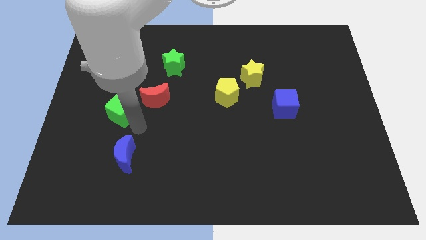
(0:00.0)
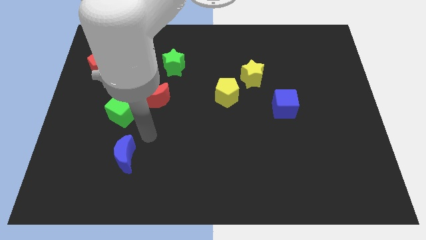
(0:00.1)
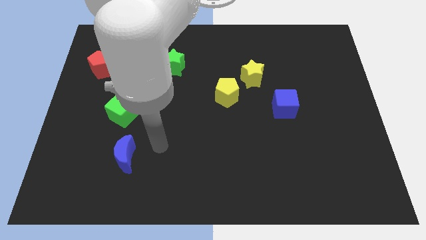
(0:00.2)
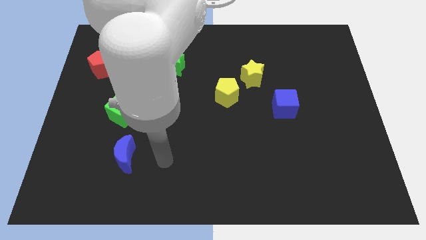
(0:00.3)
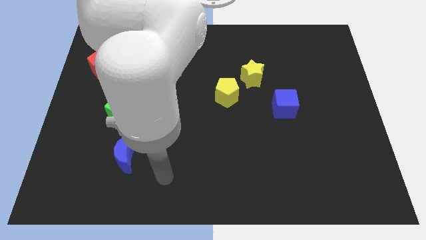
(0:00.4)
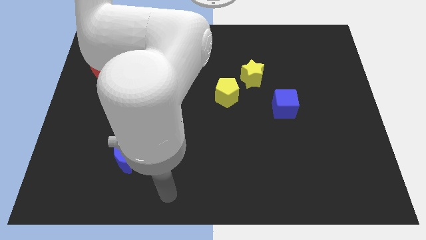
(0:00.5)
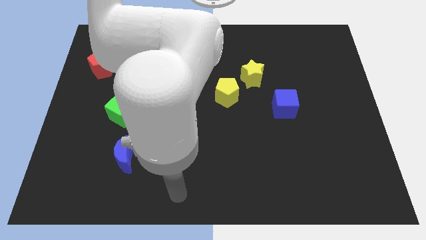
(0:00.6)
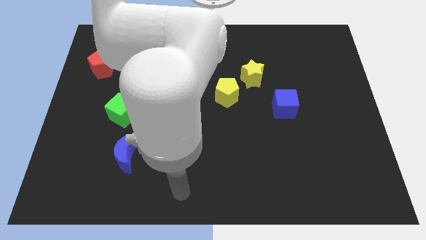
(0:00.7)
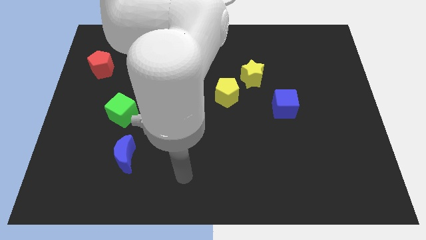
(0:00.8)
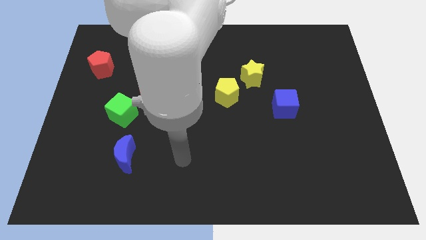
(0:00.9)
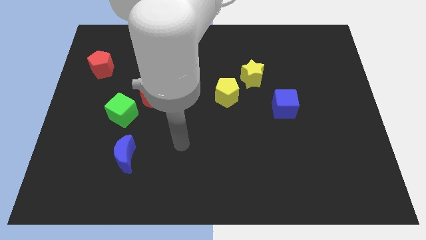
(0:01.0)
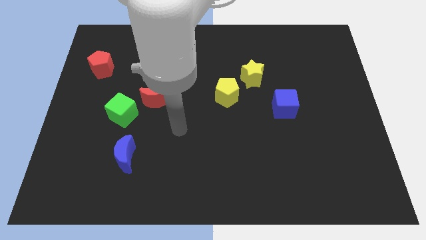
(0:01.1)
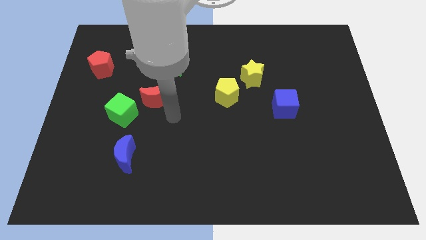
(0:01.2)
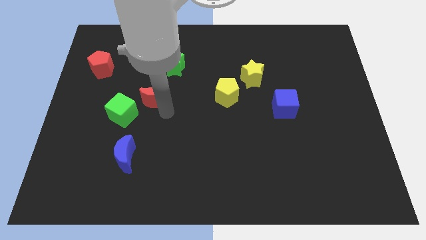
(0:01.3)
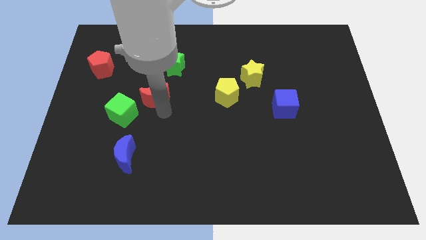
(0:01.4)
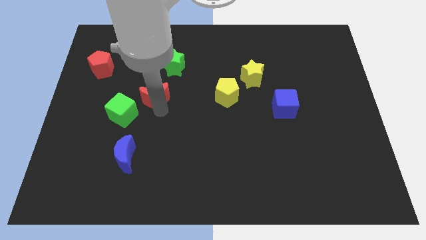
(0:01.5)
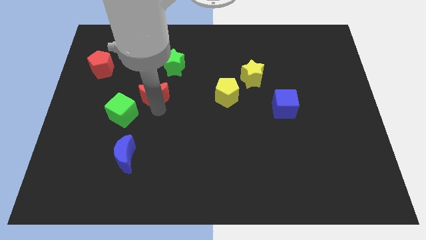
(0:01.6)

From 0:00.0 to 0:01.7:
place your arm below the red moon

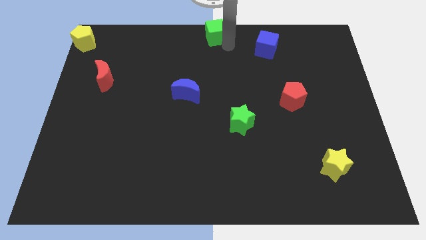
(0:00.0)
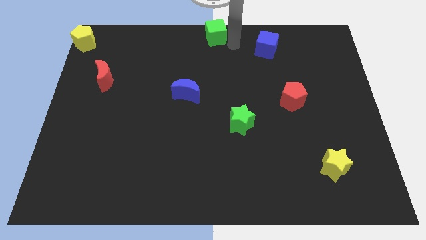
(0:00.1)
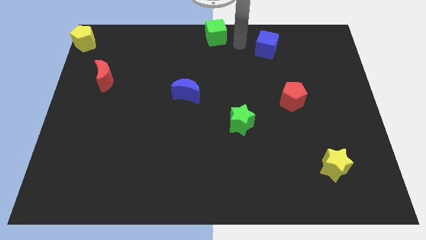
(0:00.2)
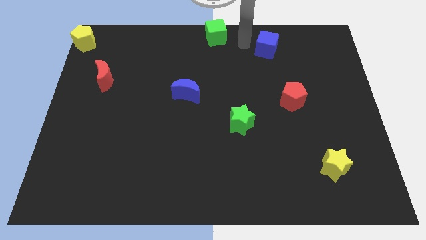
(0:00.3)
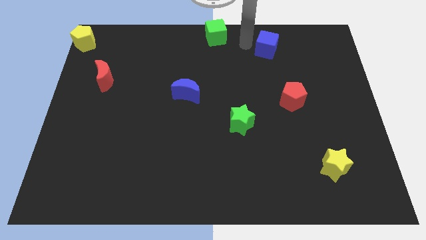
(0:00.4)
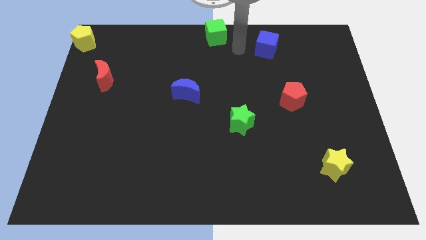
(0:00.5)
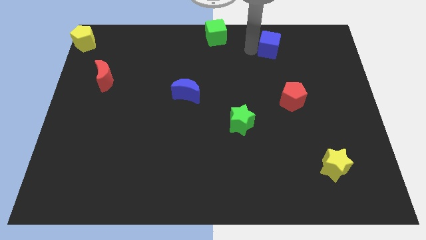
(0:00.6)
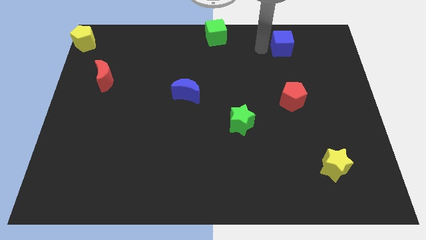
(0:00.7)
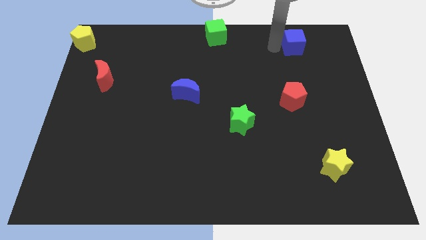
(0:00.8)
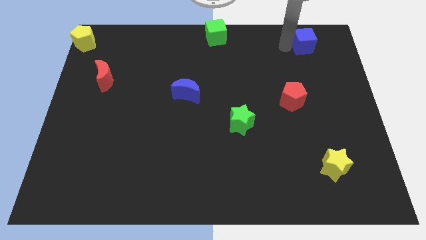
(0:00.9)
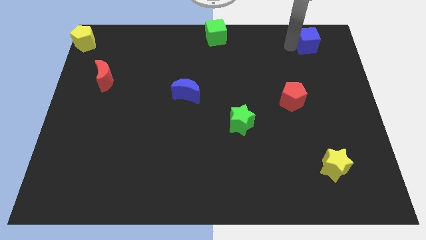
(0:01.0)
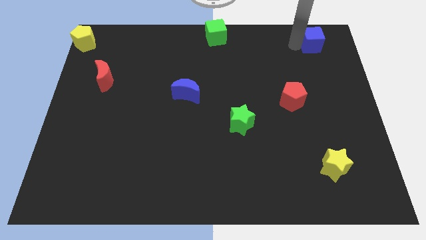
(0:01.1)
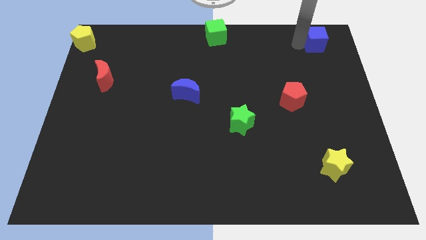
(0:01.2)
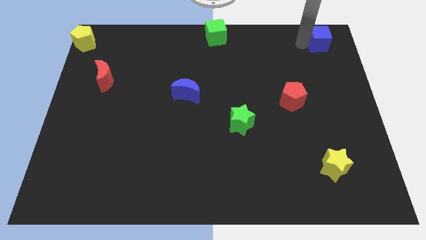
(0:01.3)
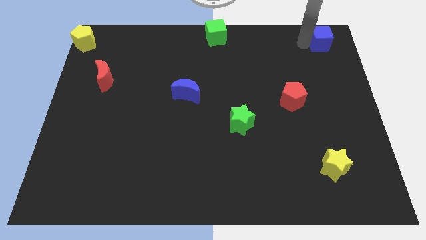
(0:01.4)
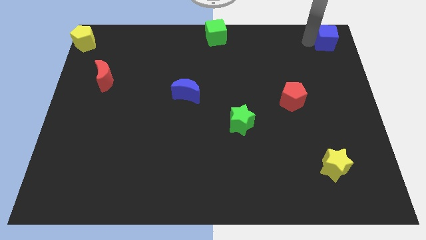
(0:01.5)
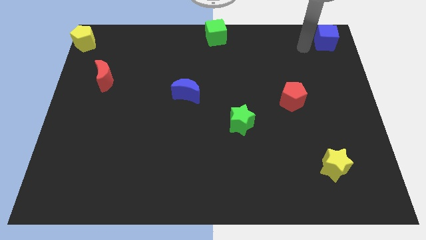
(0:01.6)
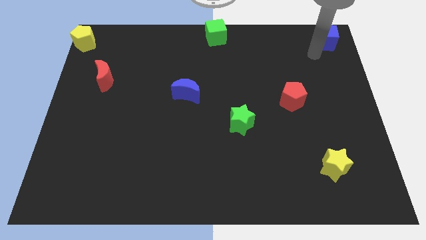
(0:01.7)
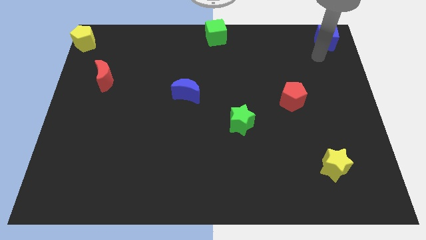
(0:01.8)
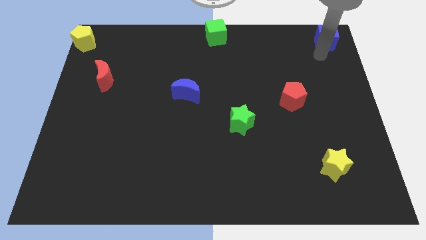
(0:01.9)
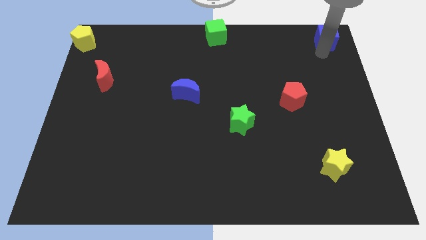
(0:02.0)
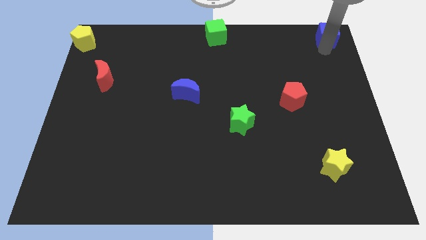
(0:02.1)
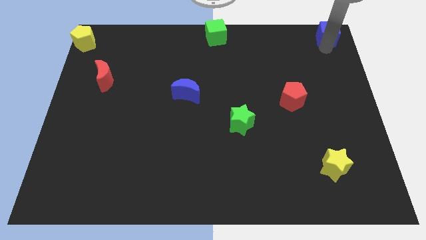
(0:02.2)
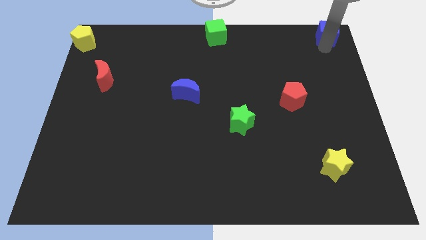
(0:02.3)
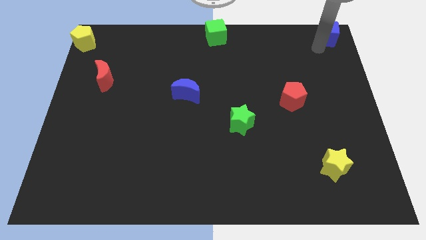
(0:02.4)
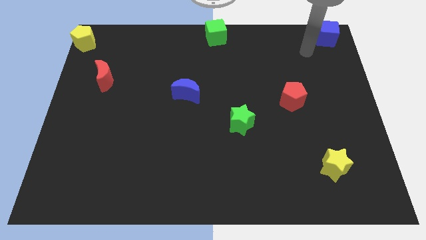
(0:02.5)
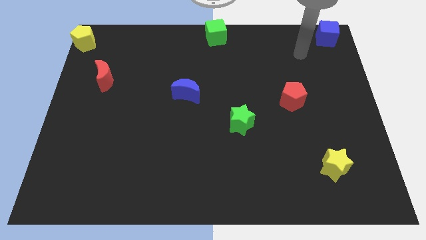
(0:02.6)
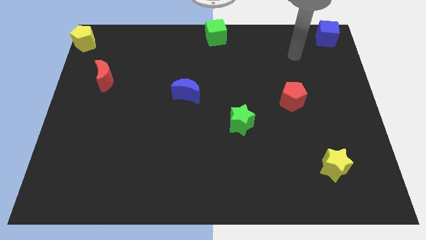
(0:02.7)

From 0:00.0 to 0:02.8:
push the blue cube to the top right corner of the board

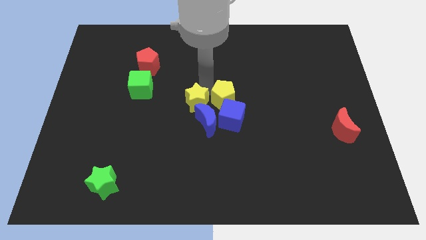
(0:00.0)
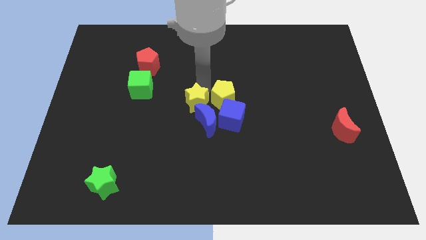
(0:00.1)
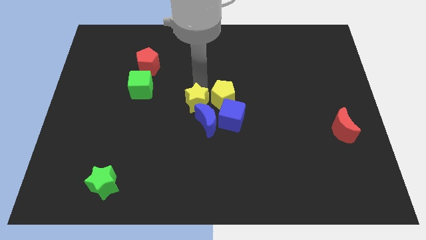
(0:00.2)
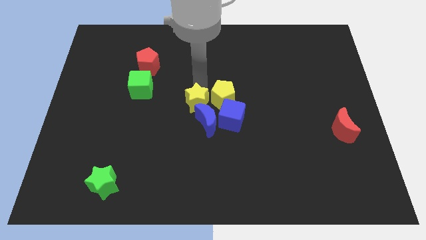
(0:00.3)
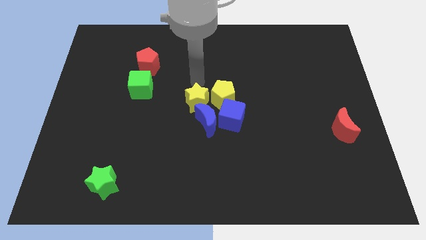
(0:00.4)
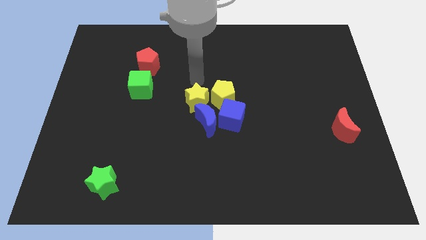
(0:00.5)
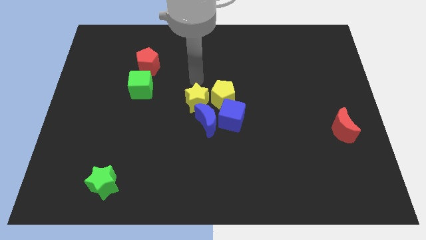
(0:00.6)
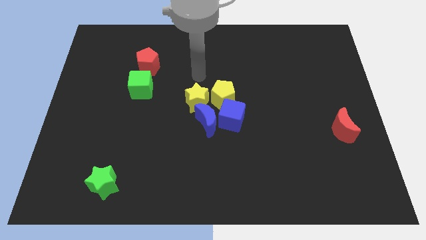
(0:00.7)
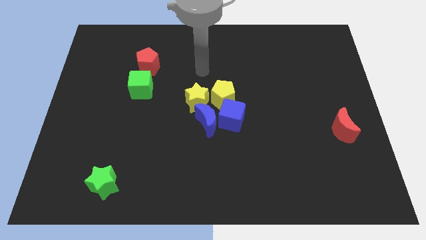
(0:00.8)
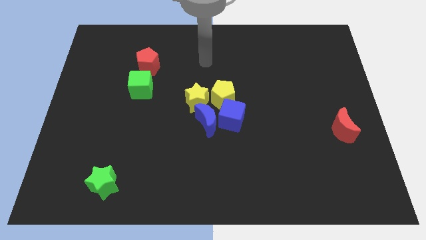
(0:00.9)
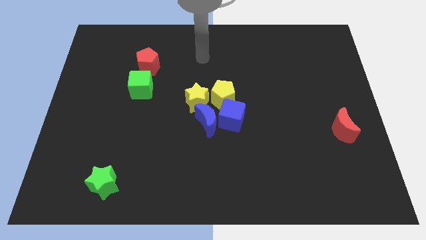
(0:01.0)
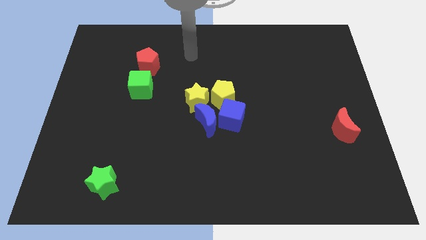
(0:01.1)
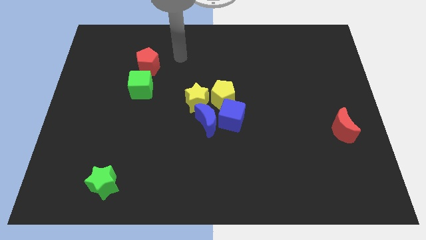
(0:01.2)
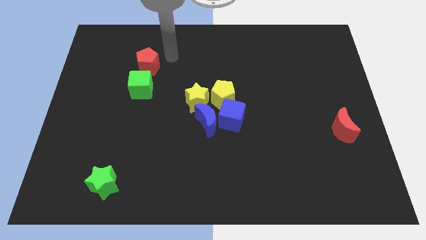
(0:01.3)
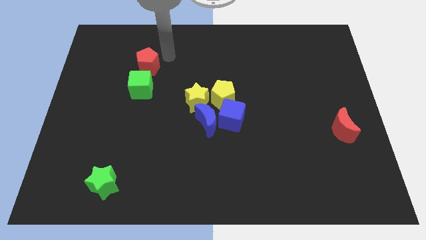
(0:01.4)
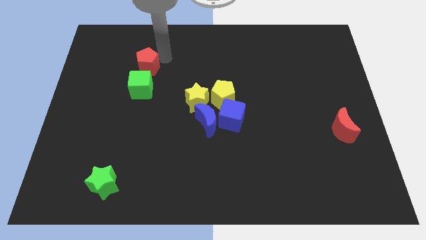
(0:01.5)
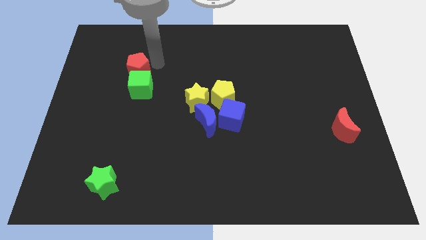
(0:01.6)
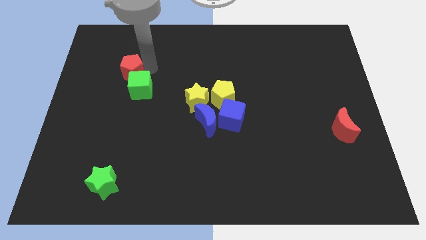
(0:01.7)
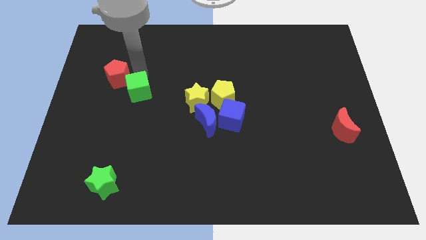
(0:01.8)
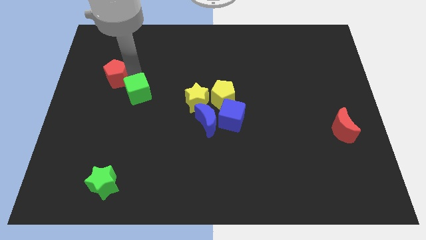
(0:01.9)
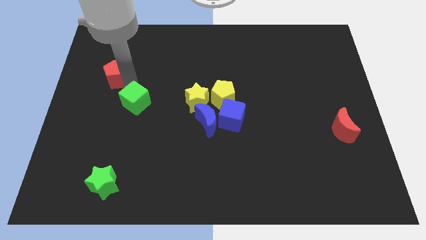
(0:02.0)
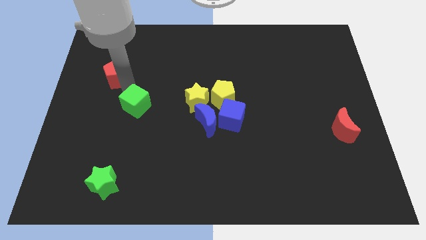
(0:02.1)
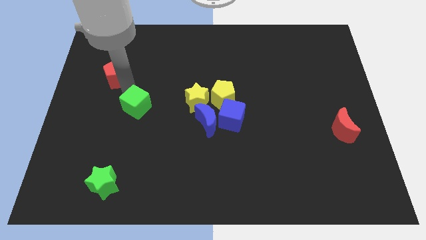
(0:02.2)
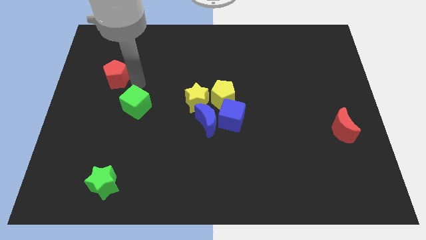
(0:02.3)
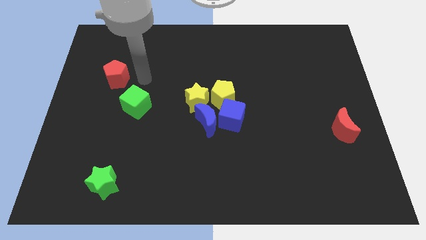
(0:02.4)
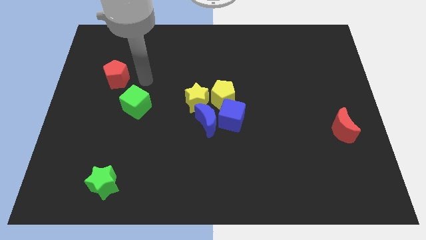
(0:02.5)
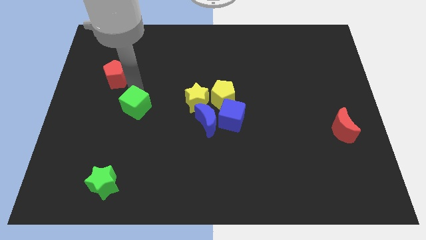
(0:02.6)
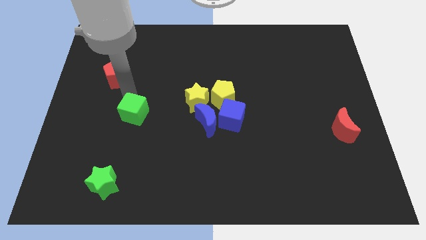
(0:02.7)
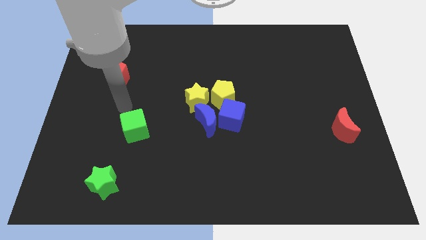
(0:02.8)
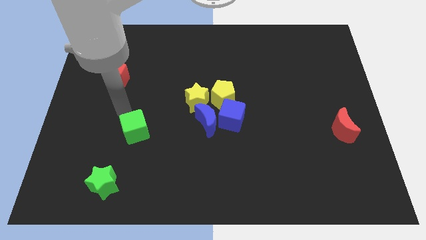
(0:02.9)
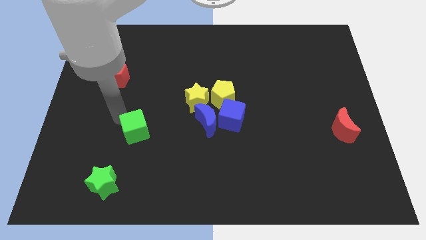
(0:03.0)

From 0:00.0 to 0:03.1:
separate the green star and the red pentagon

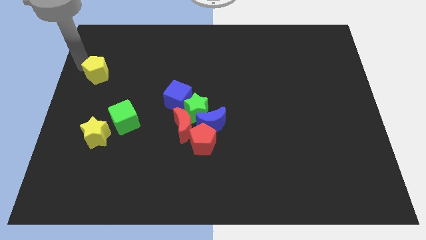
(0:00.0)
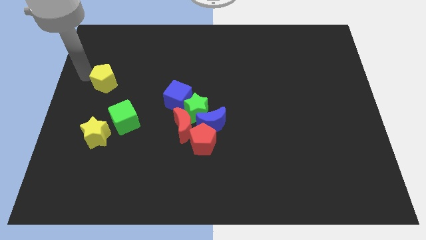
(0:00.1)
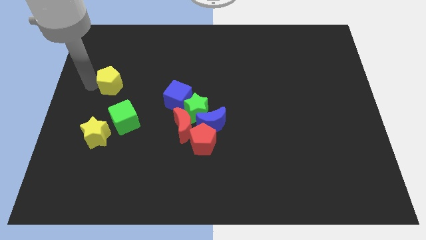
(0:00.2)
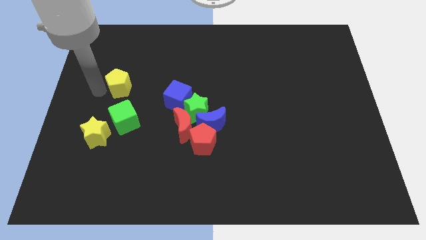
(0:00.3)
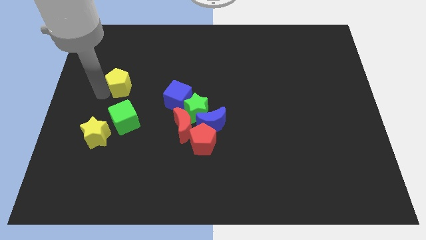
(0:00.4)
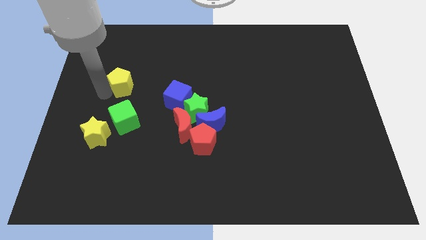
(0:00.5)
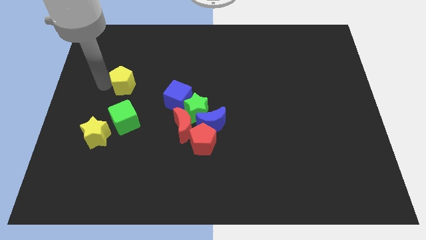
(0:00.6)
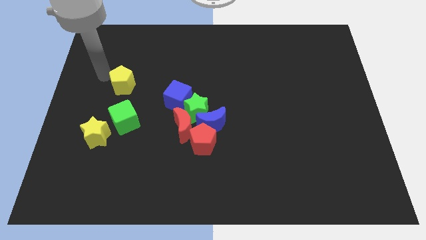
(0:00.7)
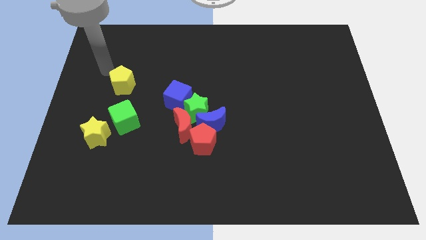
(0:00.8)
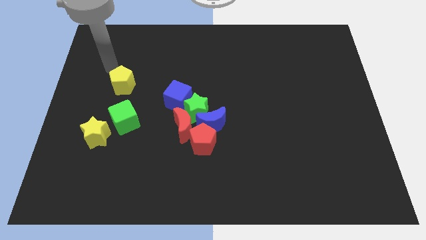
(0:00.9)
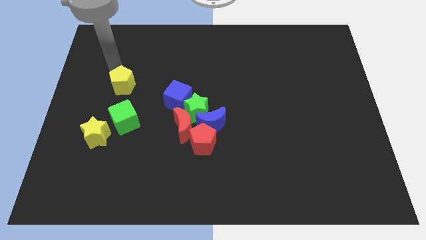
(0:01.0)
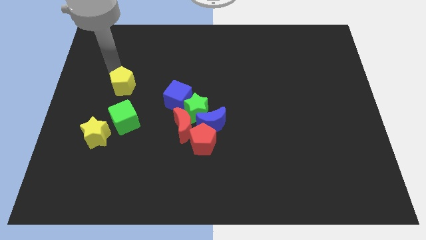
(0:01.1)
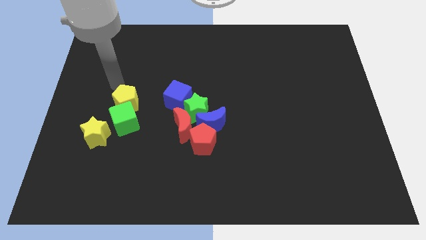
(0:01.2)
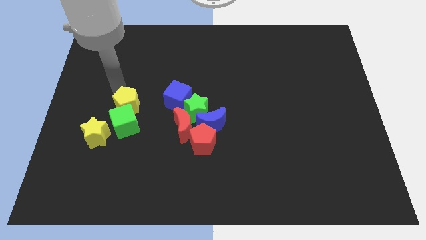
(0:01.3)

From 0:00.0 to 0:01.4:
move yellow pentagon into the top side of the green cube
